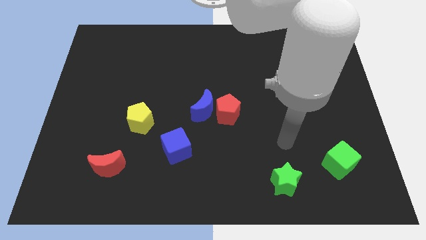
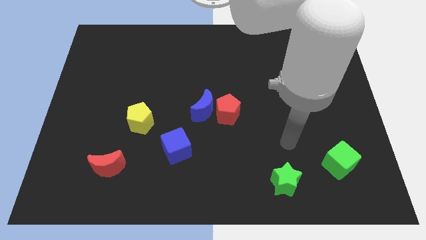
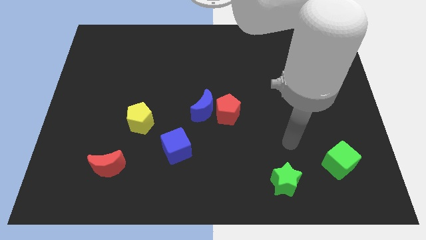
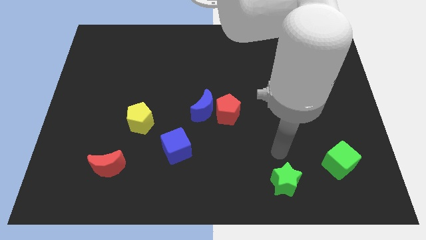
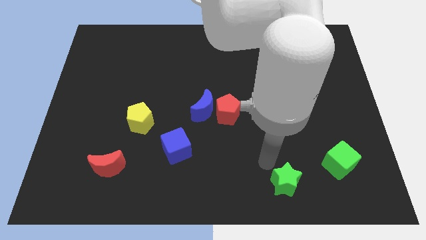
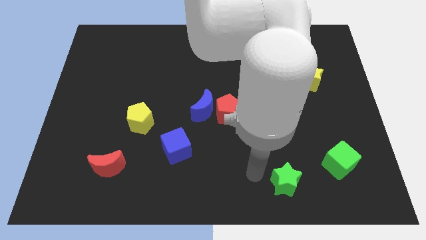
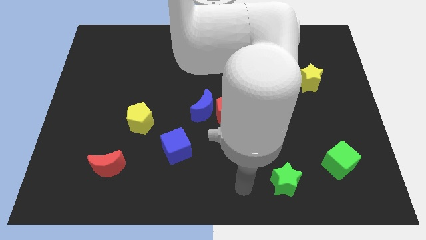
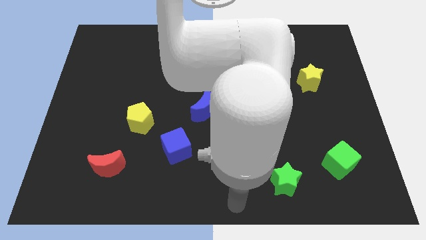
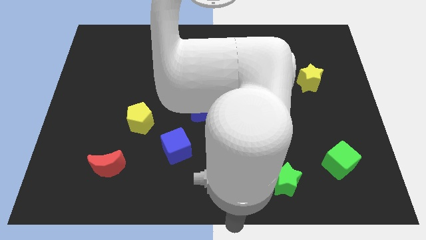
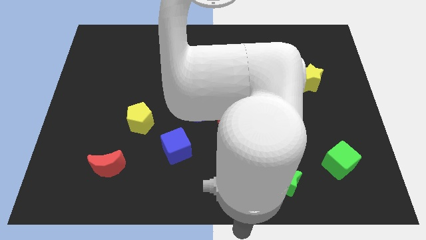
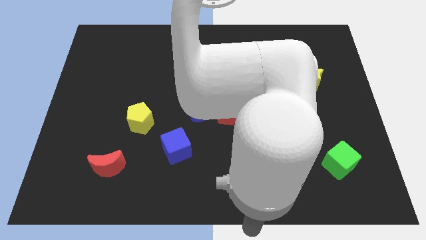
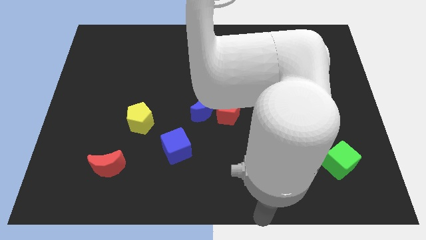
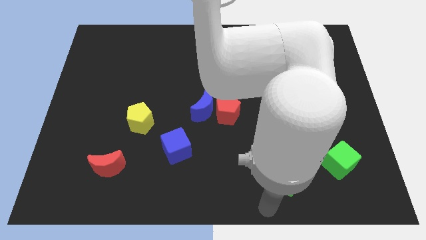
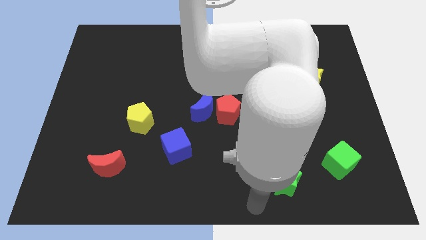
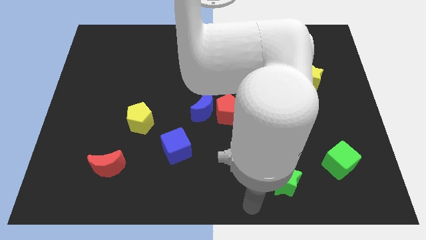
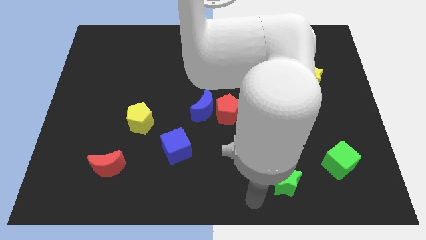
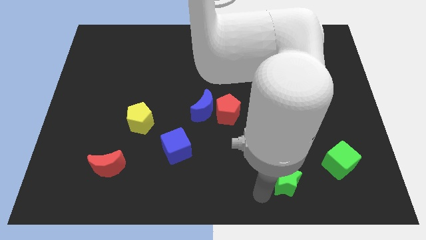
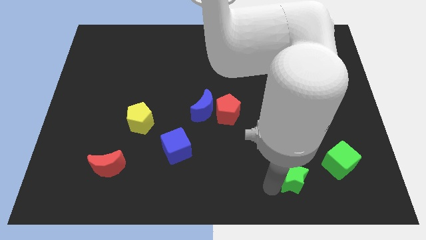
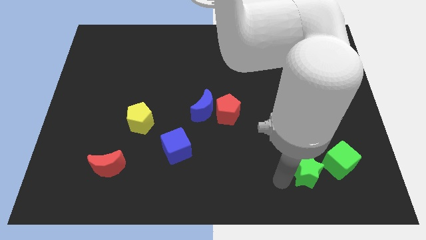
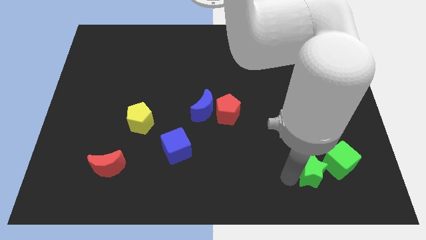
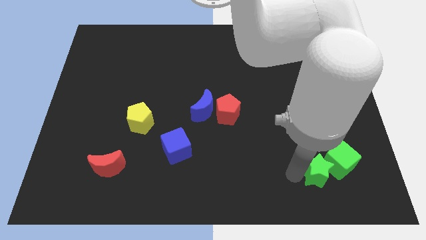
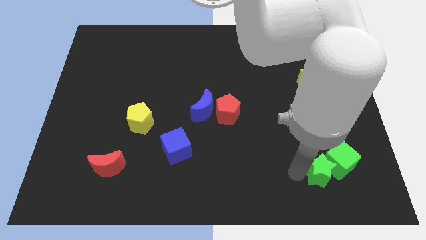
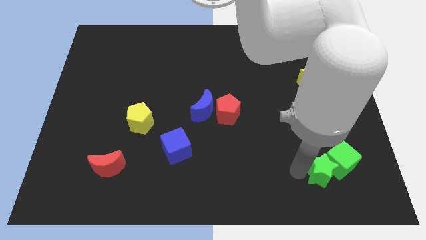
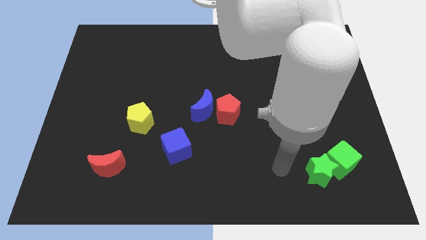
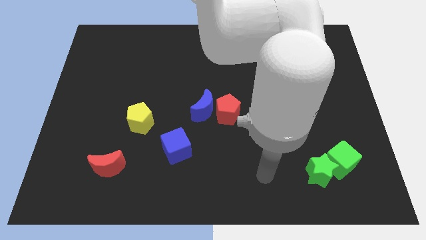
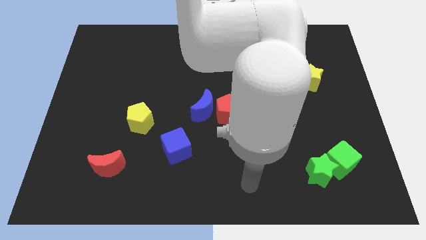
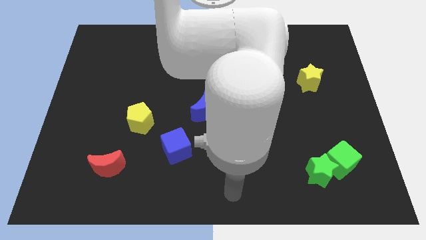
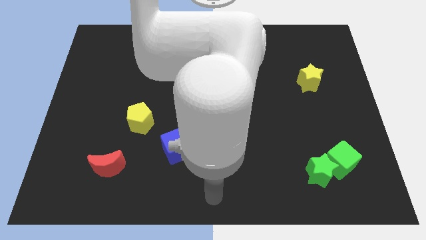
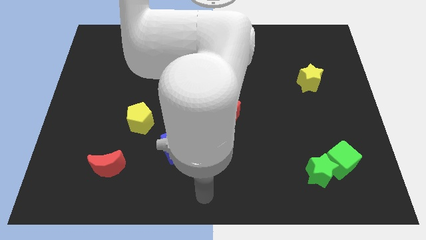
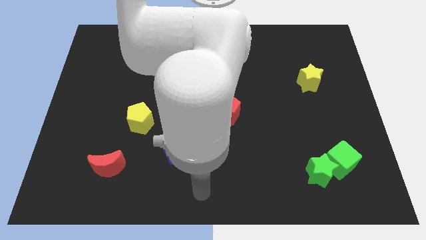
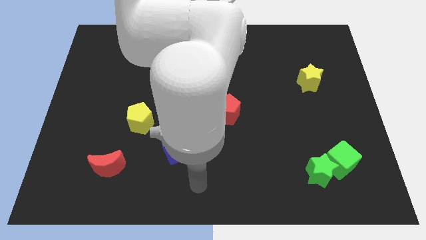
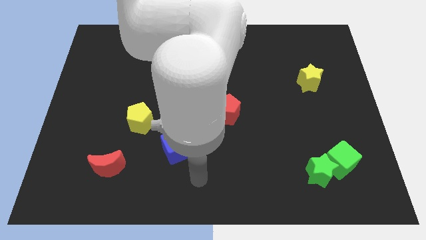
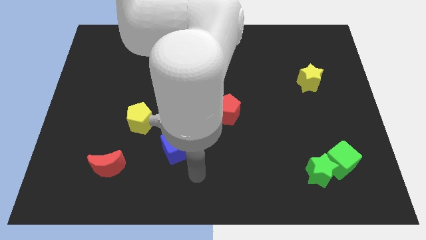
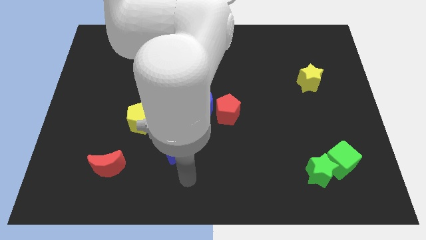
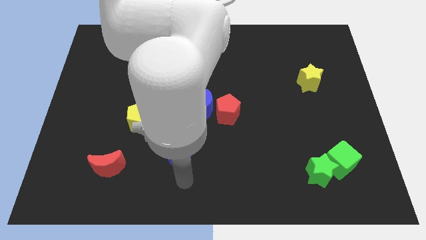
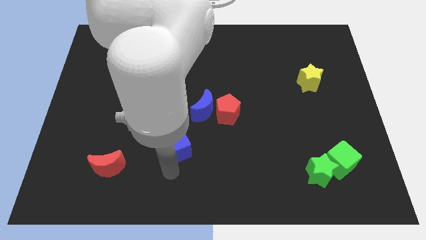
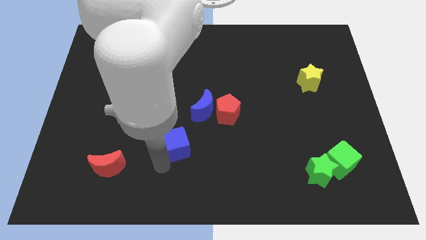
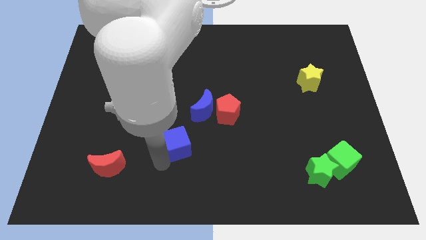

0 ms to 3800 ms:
place the green star to left side of the green cube

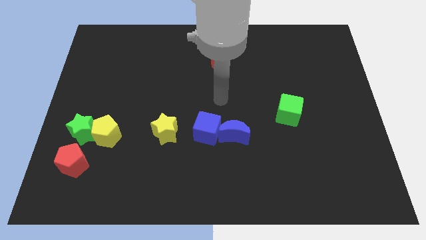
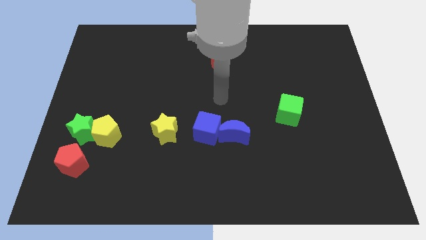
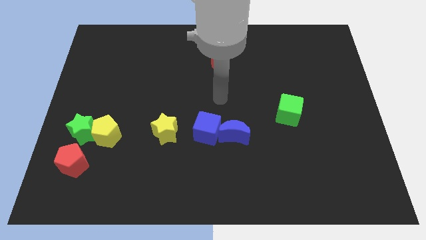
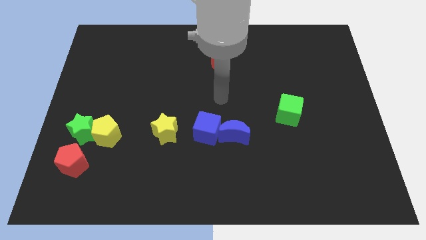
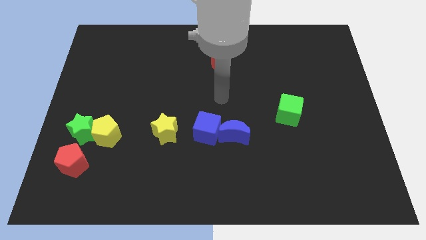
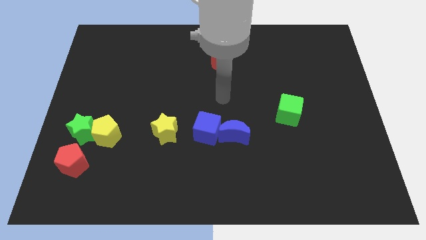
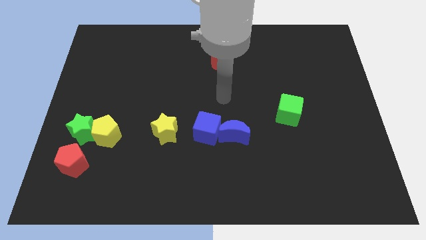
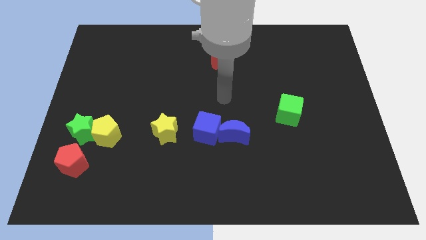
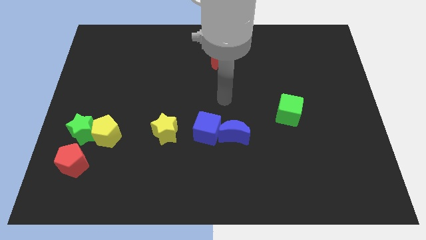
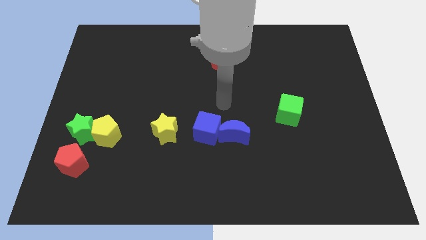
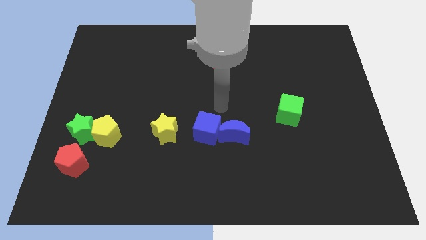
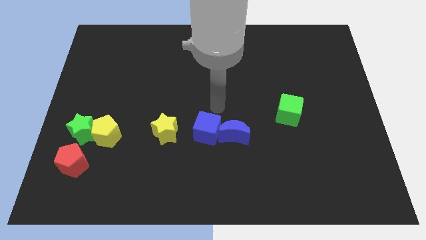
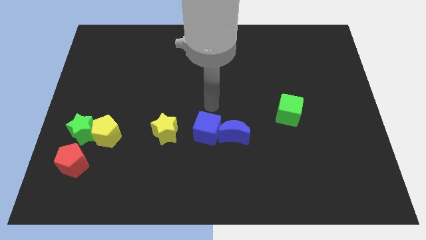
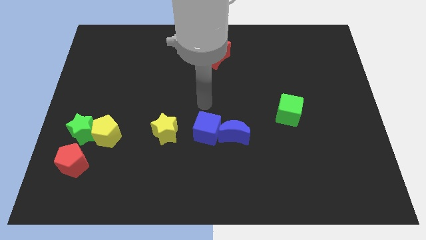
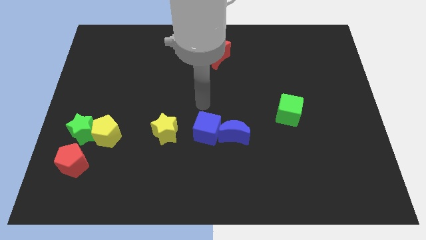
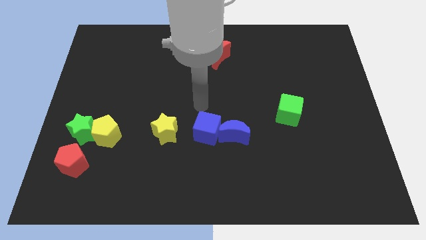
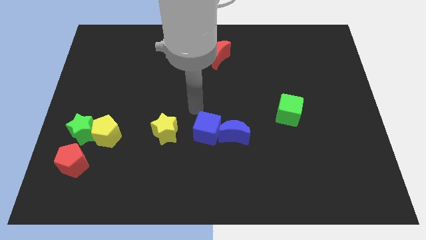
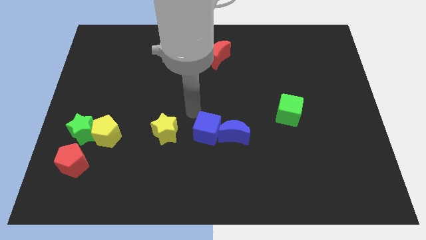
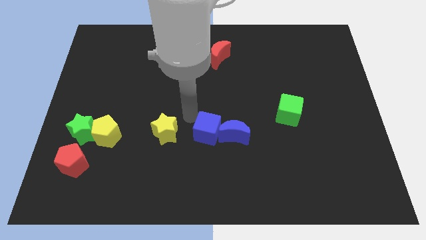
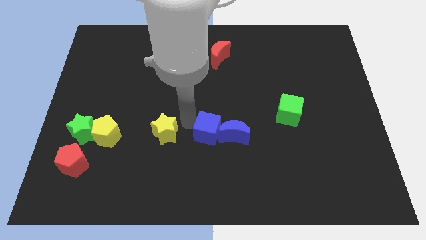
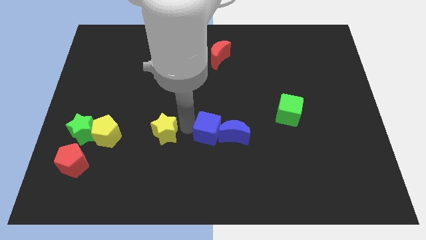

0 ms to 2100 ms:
point your arm between yellow star and blue cube

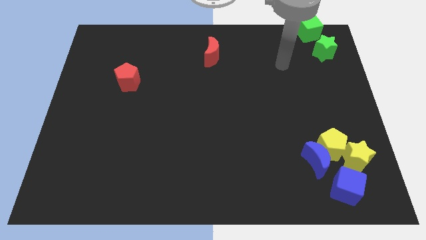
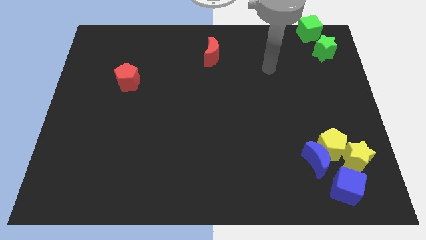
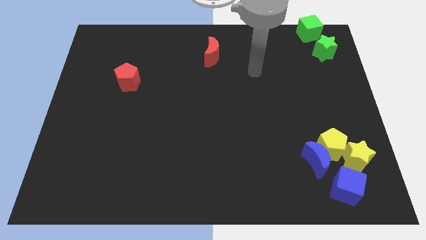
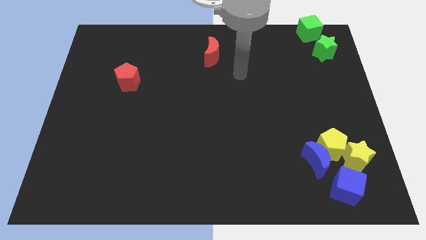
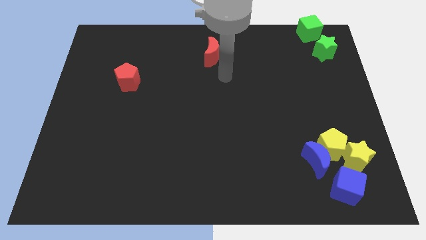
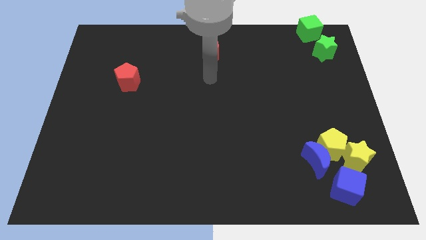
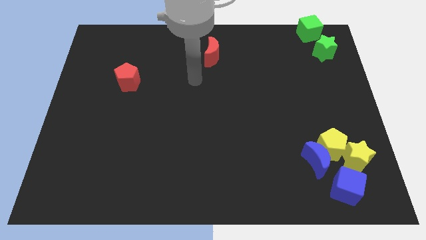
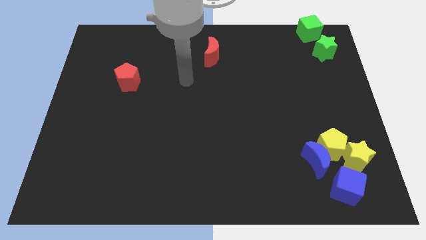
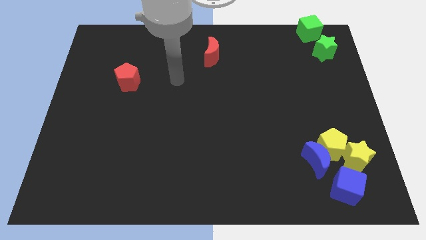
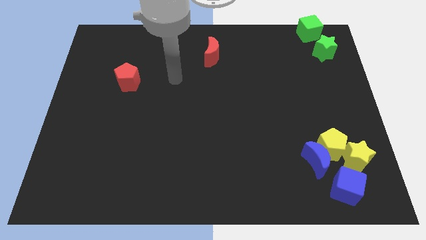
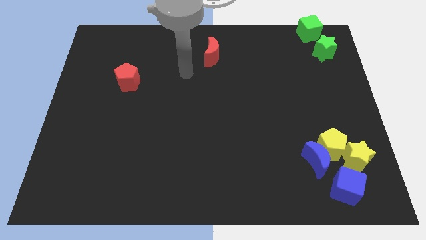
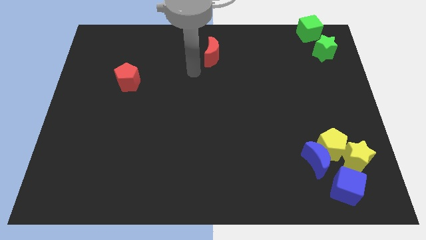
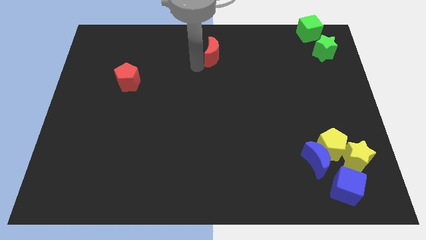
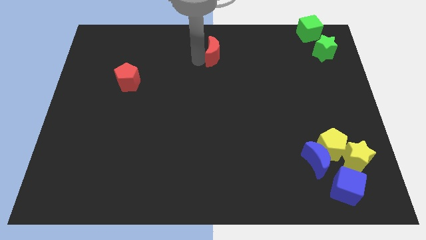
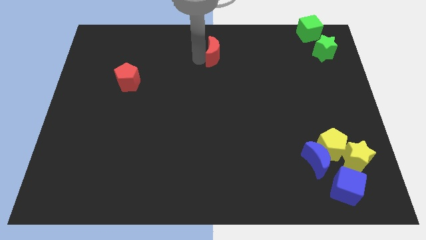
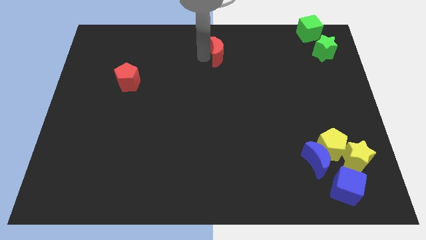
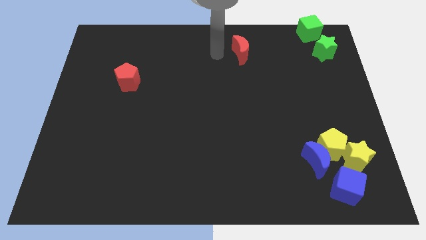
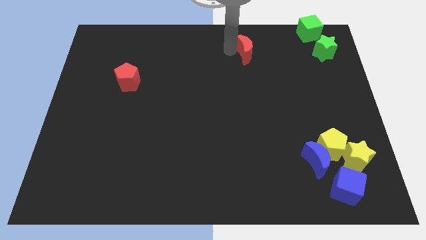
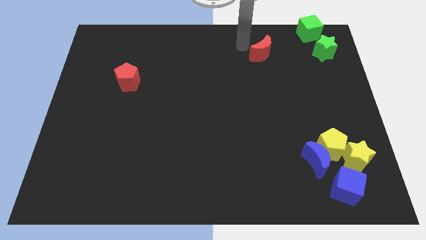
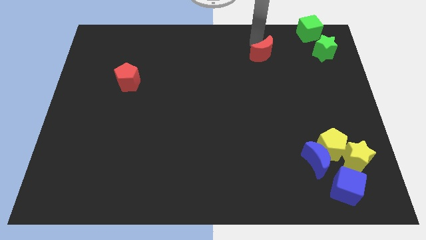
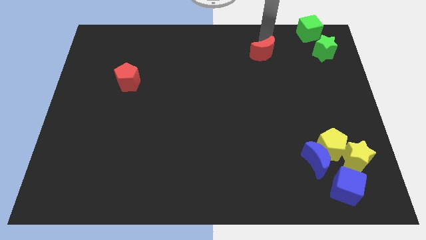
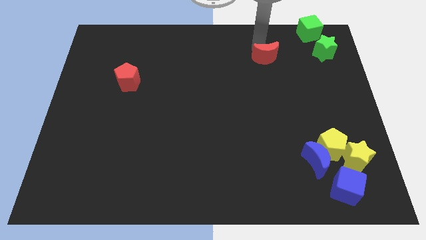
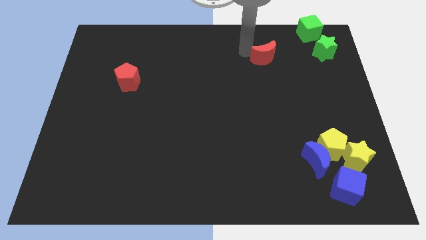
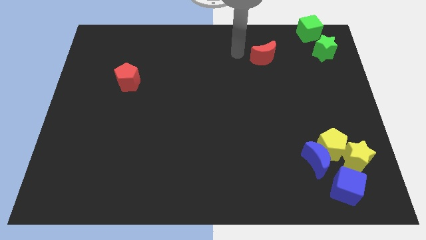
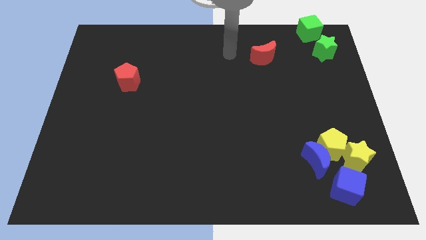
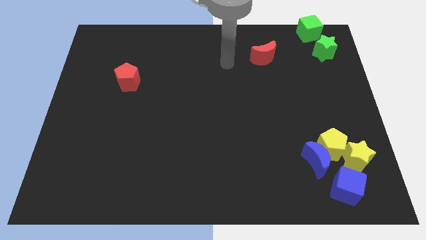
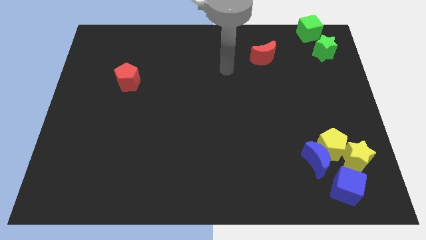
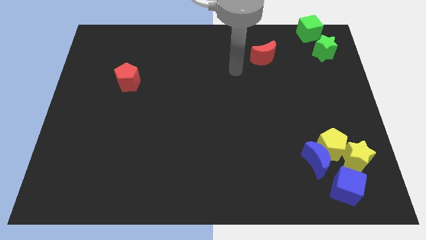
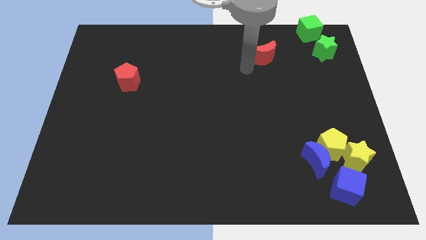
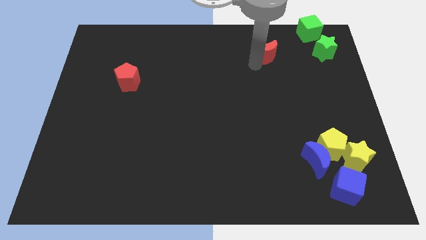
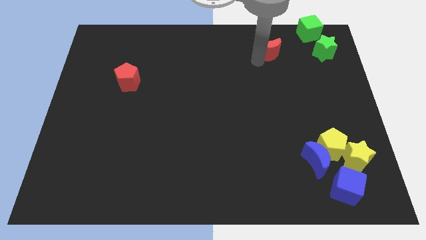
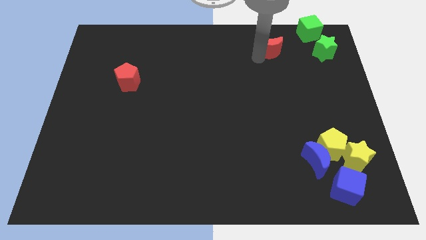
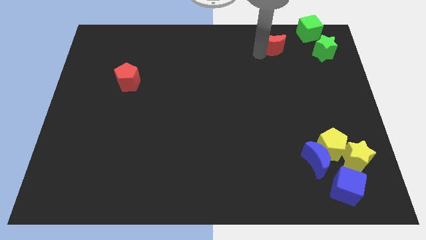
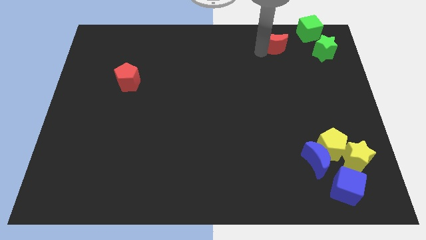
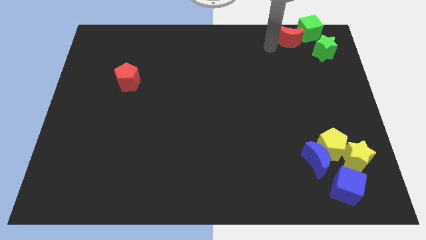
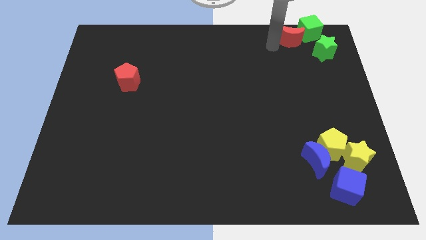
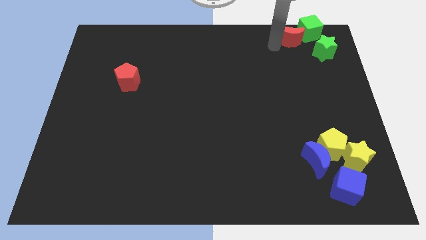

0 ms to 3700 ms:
push the red crescent to the left of the green cube
